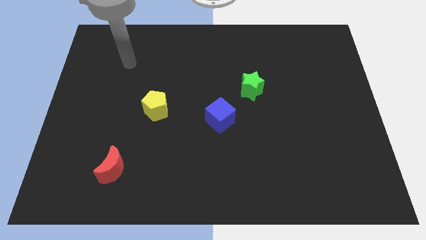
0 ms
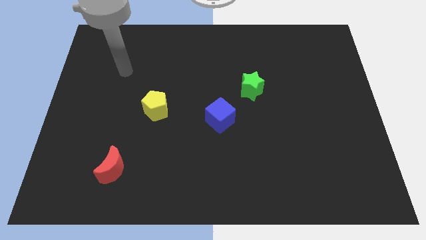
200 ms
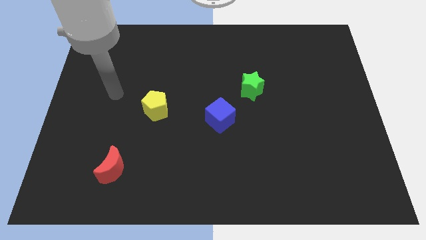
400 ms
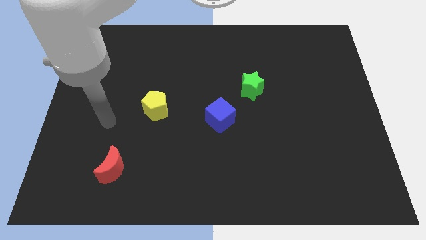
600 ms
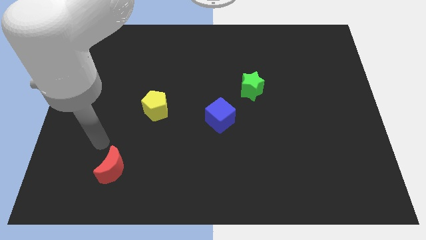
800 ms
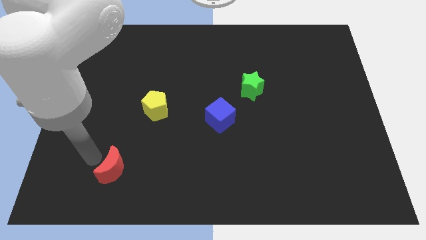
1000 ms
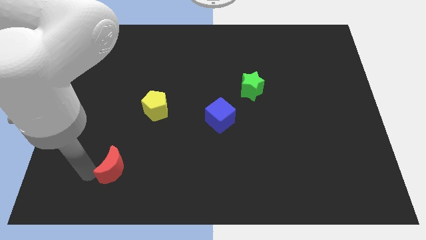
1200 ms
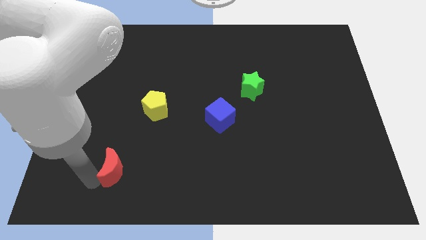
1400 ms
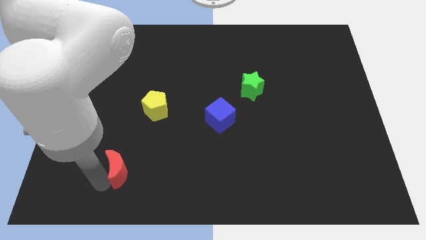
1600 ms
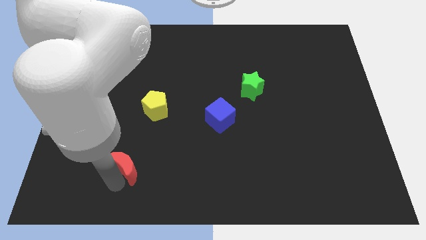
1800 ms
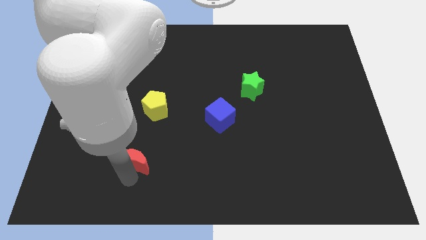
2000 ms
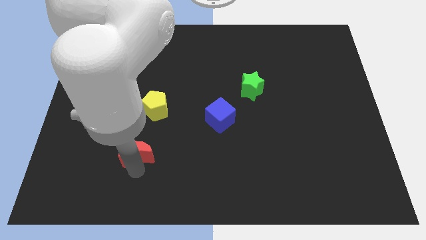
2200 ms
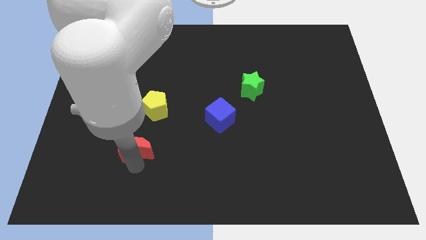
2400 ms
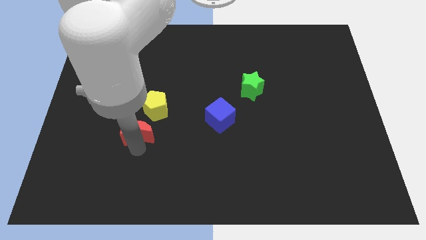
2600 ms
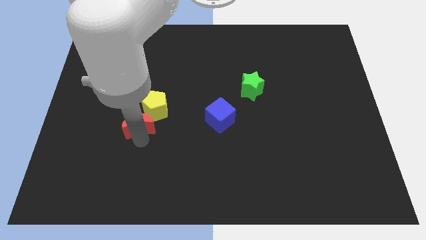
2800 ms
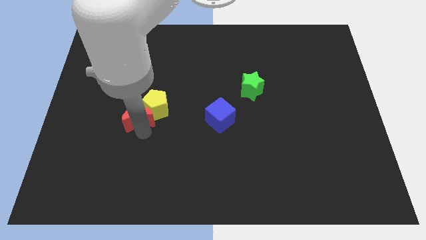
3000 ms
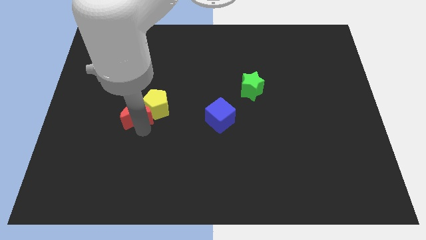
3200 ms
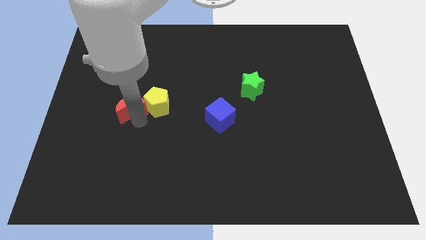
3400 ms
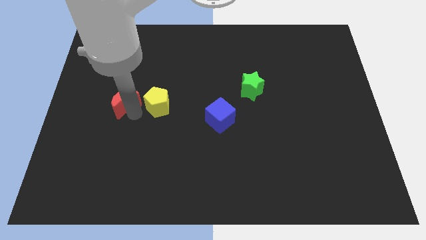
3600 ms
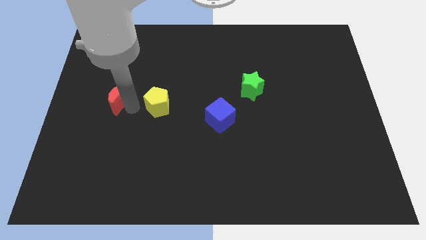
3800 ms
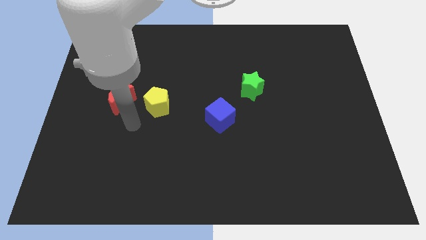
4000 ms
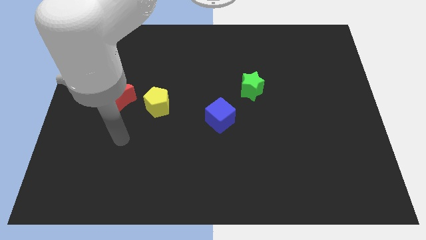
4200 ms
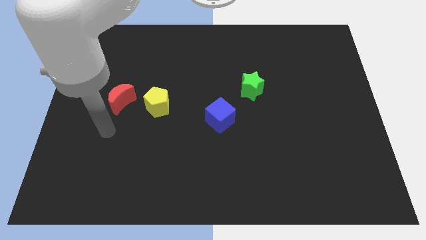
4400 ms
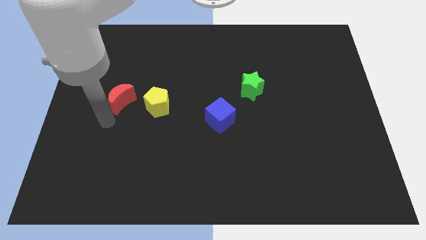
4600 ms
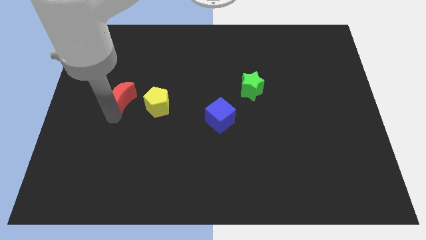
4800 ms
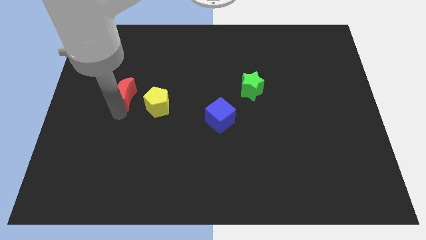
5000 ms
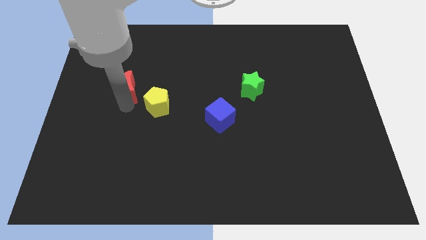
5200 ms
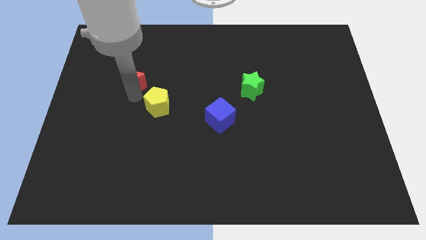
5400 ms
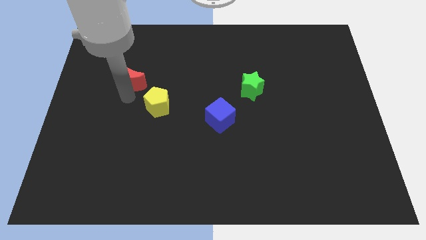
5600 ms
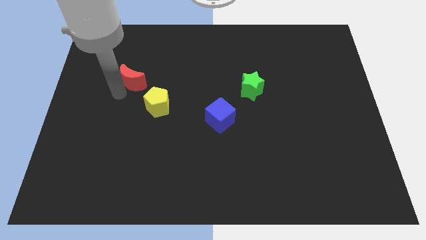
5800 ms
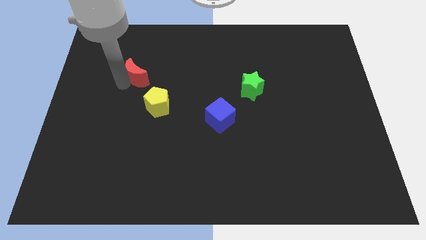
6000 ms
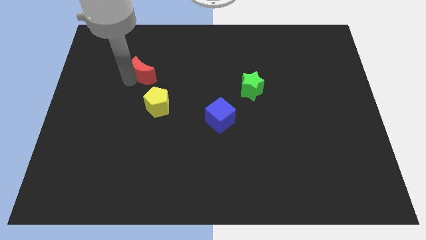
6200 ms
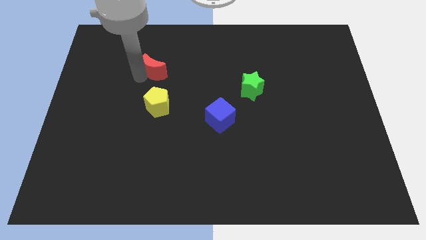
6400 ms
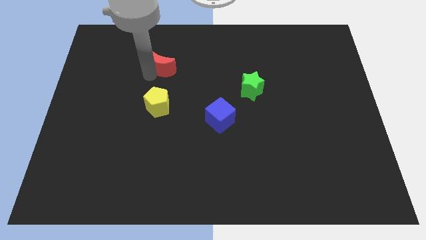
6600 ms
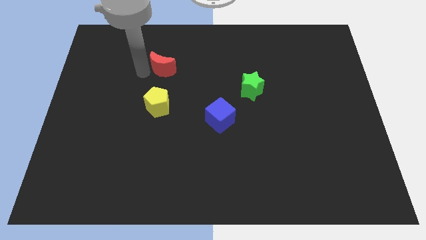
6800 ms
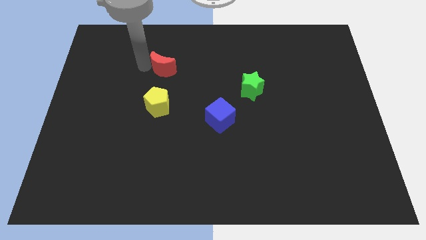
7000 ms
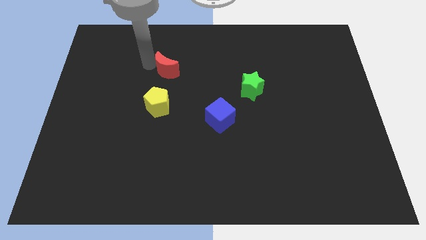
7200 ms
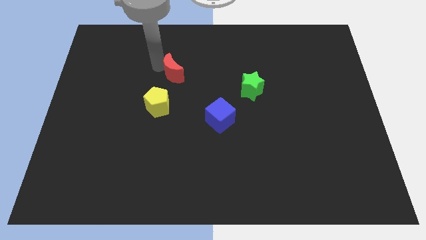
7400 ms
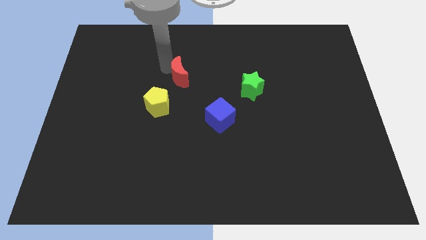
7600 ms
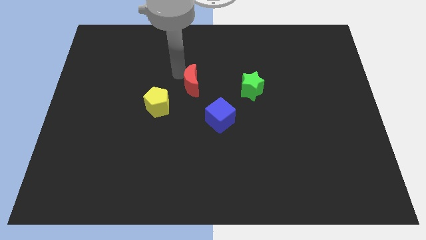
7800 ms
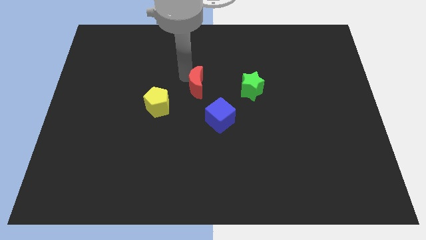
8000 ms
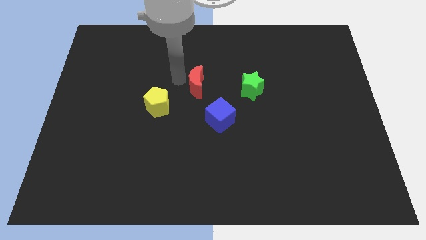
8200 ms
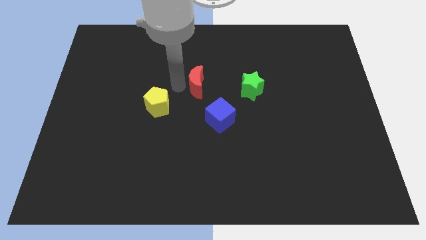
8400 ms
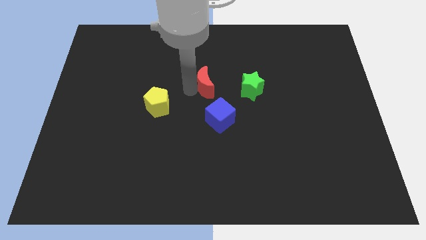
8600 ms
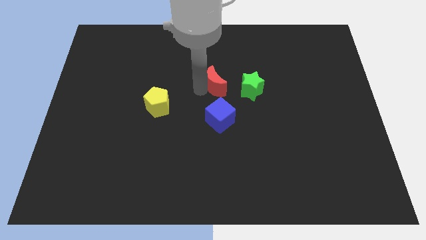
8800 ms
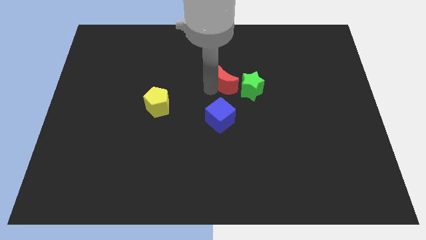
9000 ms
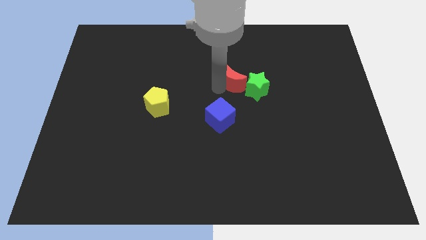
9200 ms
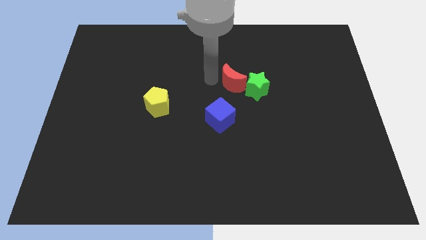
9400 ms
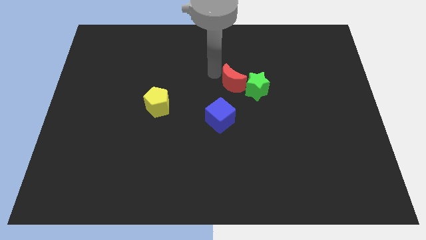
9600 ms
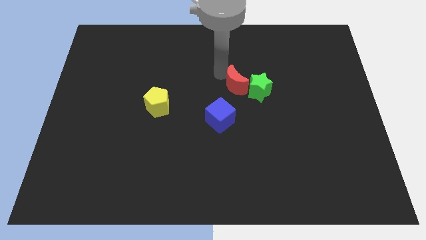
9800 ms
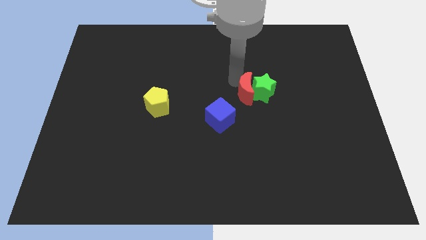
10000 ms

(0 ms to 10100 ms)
slide the red block towards the green block

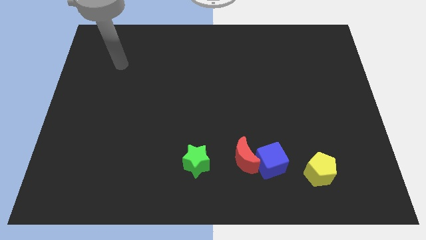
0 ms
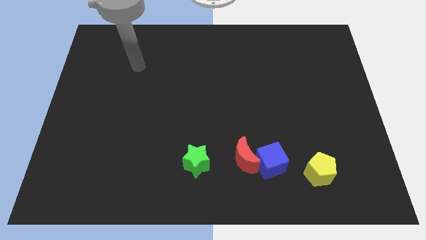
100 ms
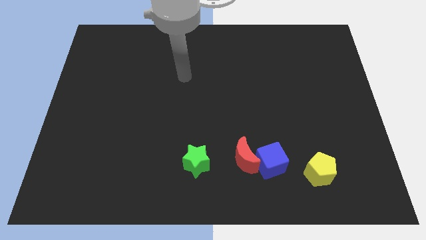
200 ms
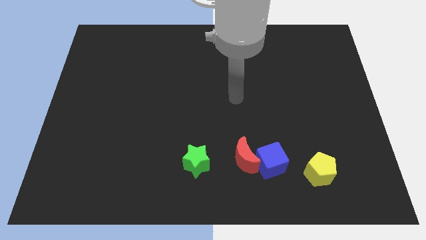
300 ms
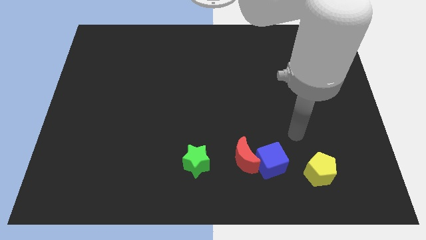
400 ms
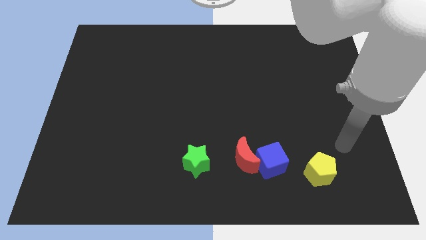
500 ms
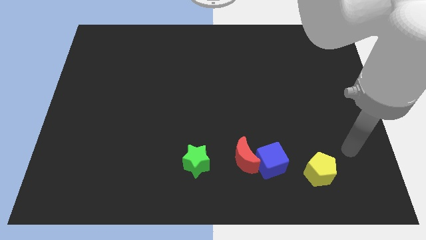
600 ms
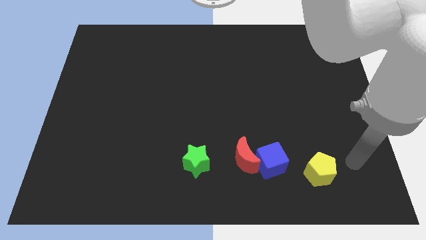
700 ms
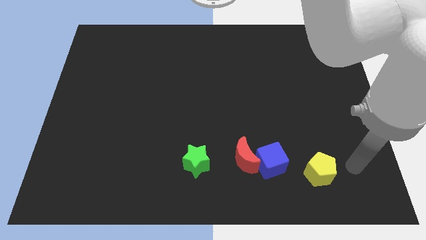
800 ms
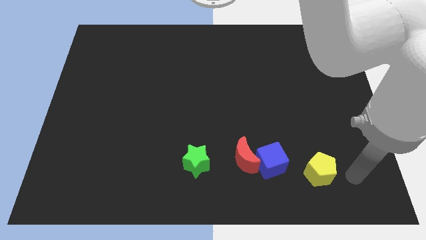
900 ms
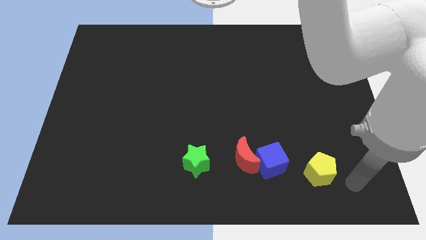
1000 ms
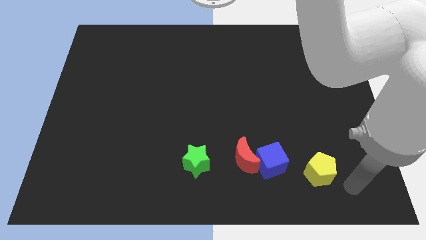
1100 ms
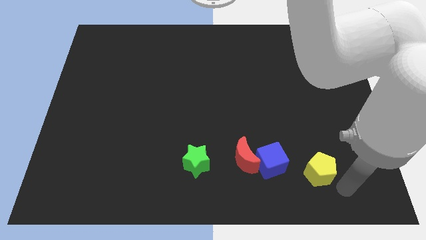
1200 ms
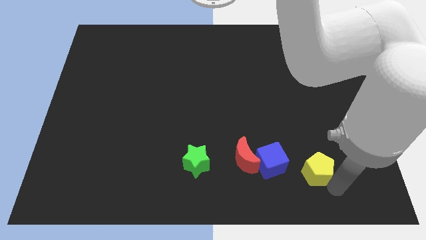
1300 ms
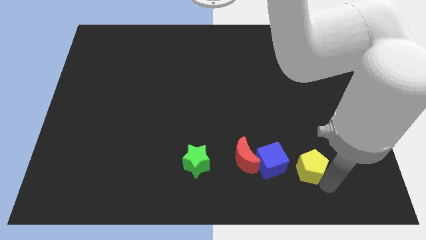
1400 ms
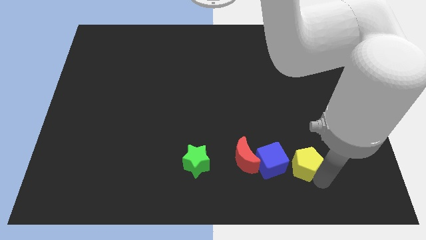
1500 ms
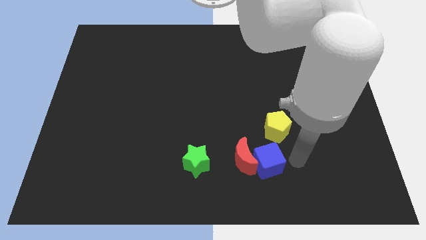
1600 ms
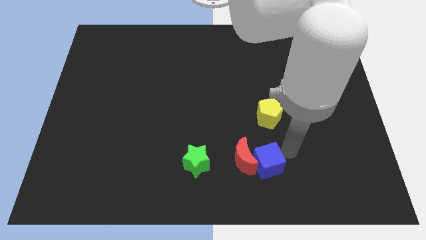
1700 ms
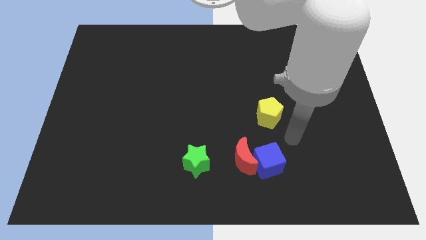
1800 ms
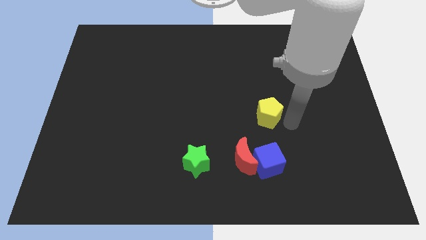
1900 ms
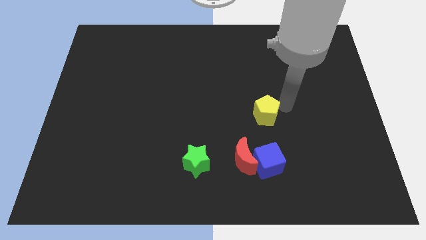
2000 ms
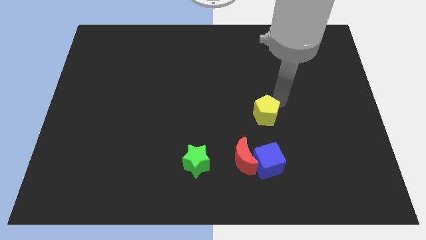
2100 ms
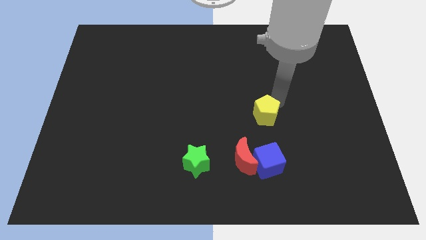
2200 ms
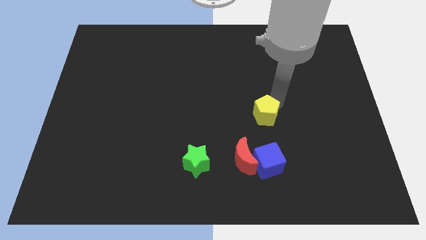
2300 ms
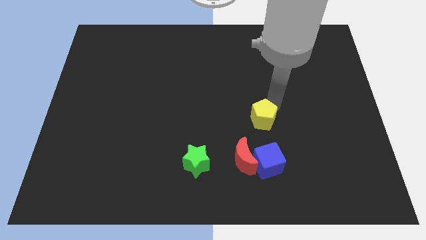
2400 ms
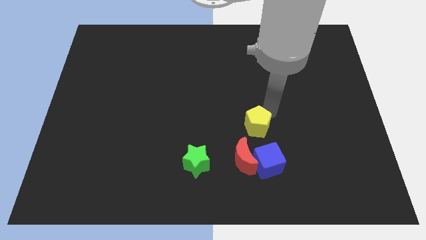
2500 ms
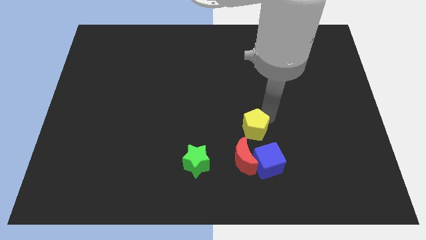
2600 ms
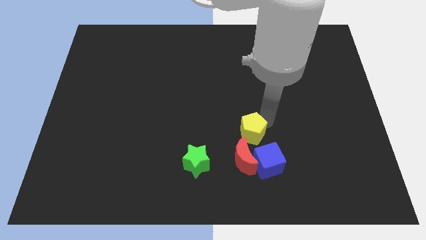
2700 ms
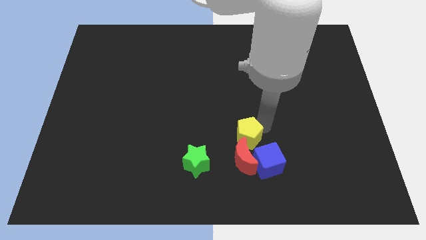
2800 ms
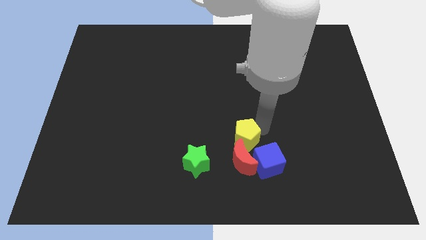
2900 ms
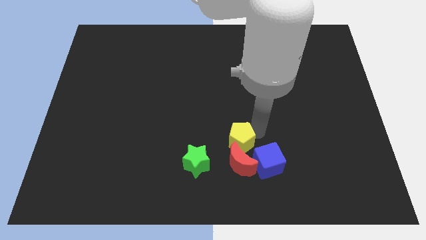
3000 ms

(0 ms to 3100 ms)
push the pentagon close to the red block
